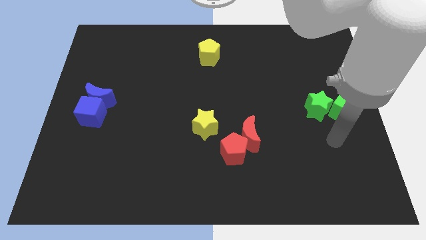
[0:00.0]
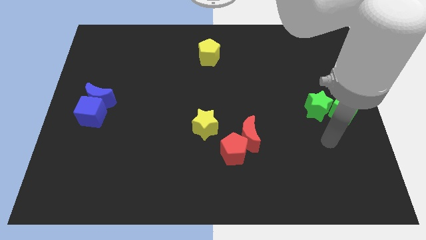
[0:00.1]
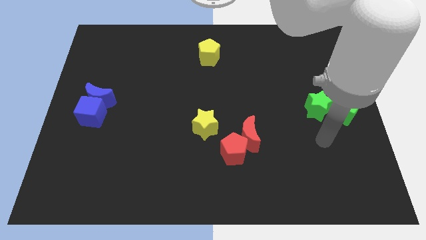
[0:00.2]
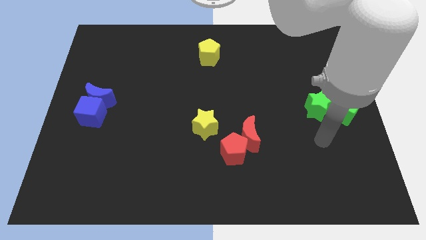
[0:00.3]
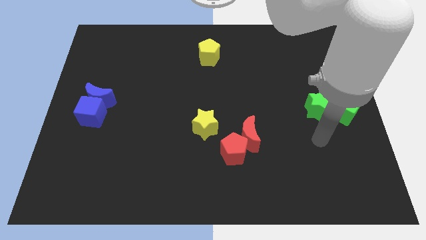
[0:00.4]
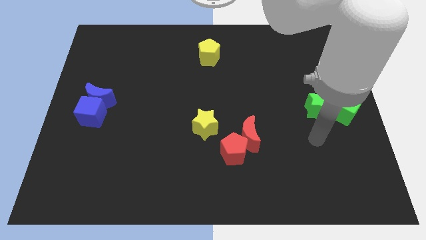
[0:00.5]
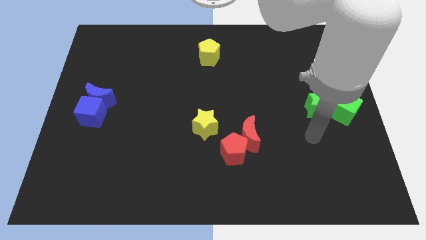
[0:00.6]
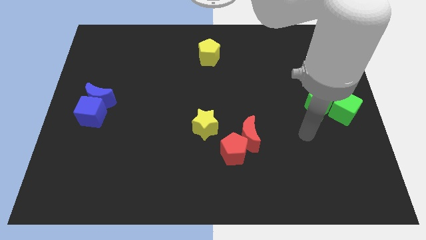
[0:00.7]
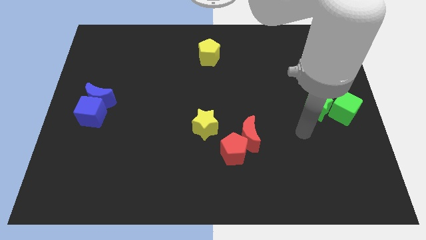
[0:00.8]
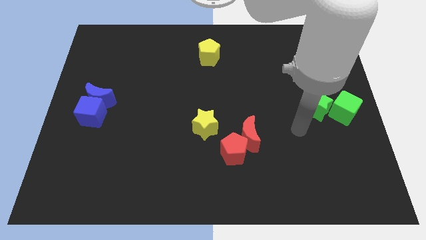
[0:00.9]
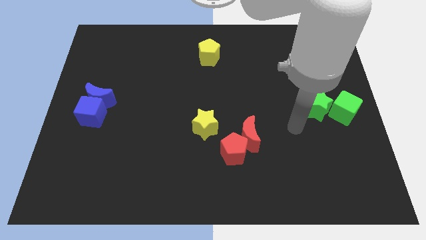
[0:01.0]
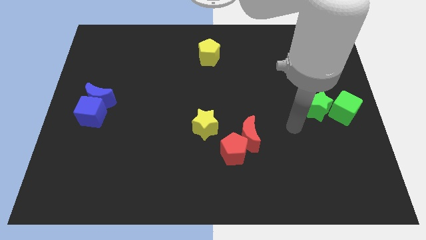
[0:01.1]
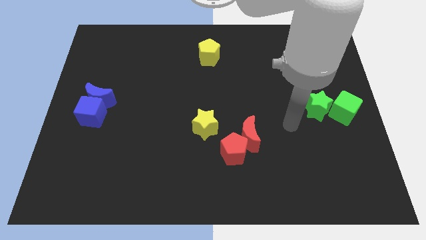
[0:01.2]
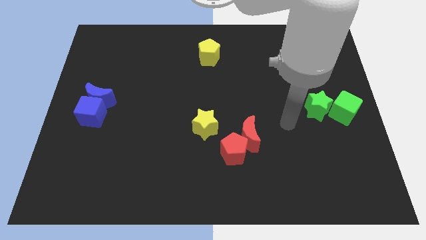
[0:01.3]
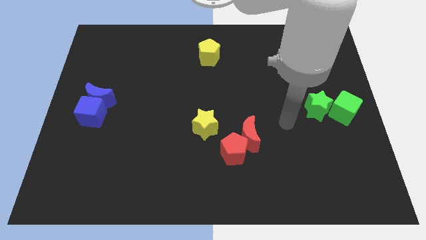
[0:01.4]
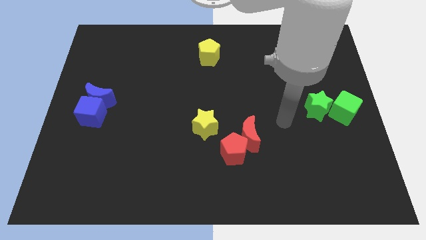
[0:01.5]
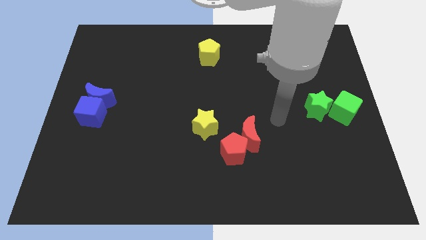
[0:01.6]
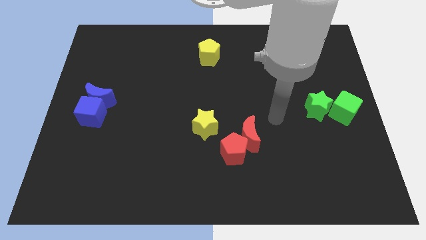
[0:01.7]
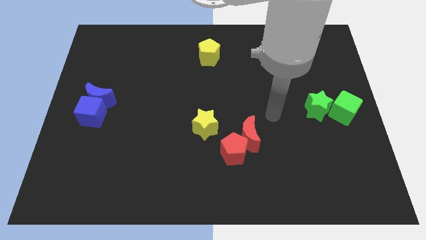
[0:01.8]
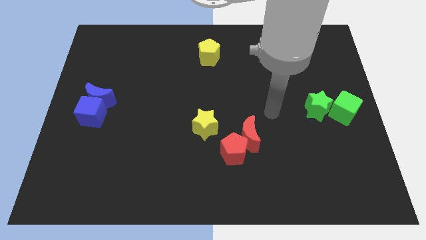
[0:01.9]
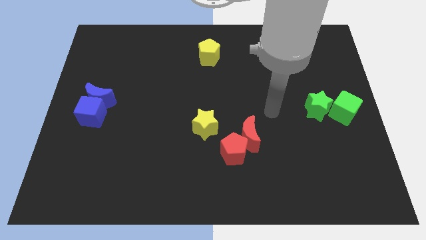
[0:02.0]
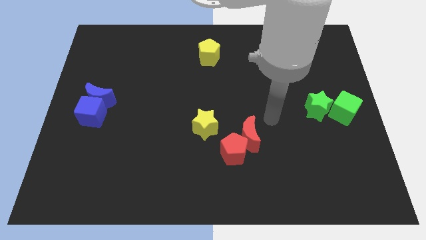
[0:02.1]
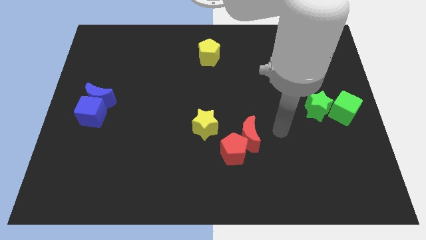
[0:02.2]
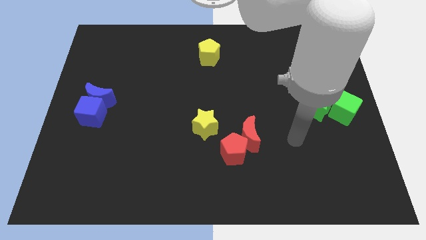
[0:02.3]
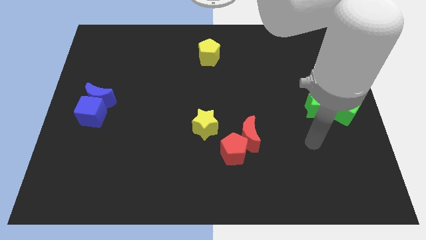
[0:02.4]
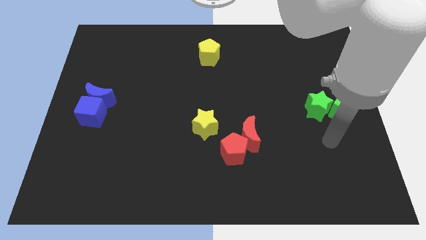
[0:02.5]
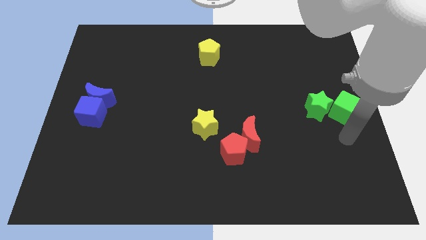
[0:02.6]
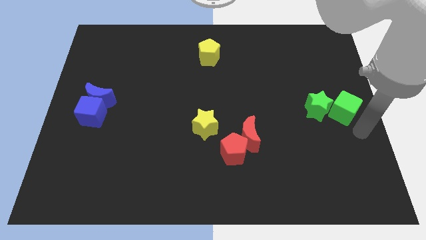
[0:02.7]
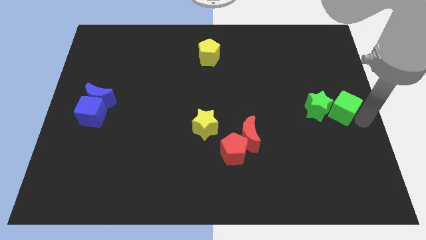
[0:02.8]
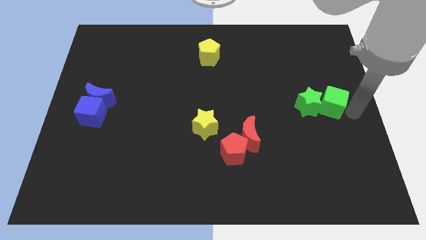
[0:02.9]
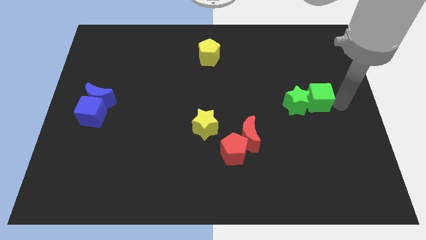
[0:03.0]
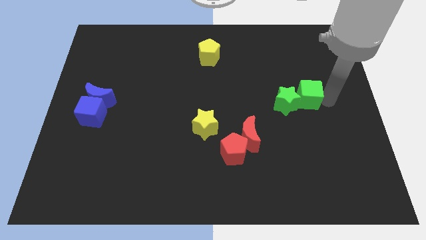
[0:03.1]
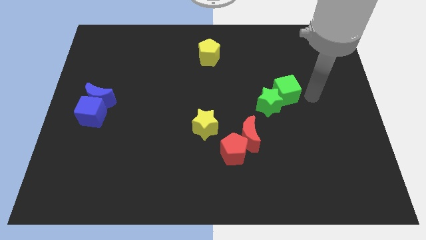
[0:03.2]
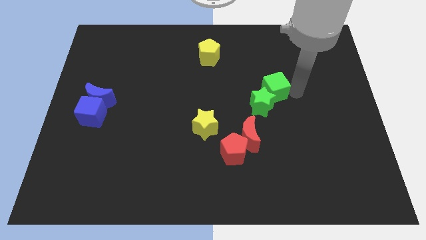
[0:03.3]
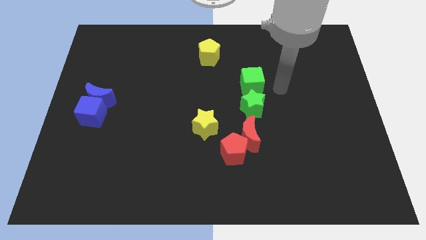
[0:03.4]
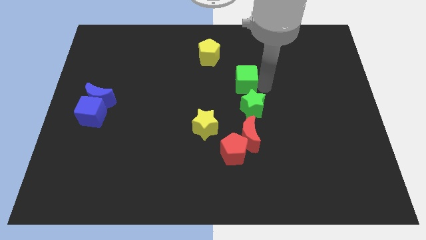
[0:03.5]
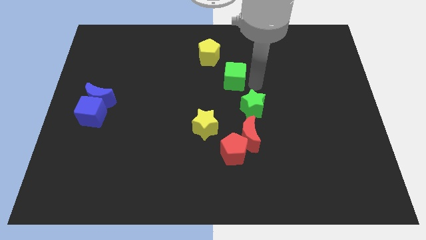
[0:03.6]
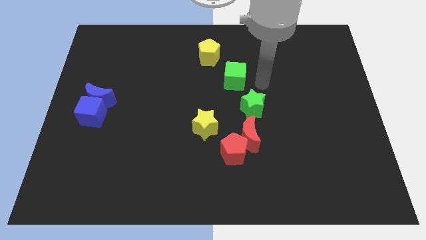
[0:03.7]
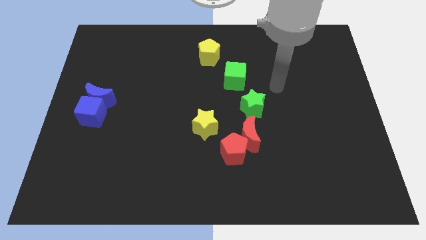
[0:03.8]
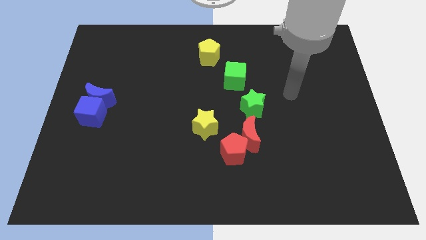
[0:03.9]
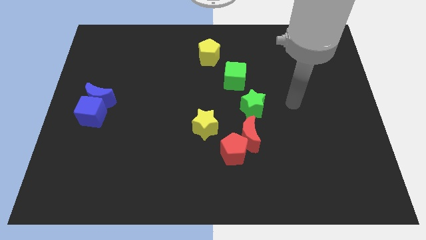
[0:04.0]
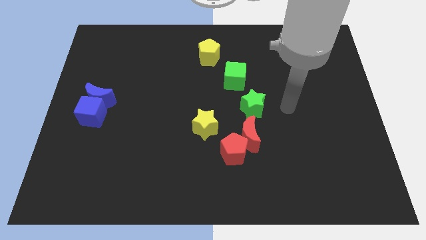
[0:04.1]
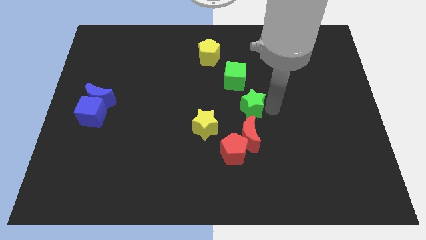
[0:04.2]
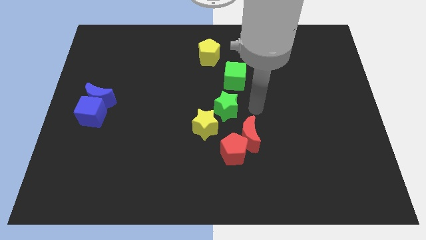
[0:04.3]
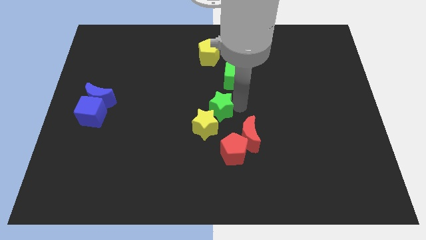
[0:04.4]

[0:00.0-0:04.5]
push the green star and green cube towards the center

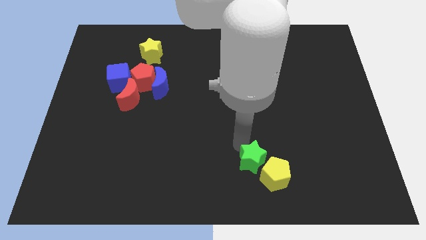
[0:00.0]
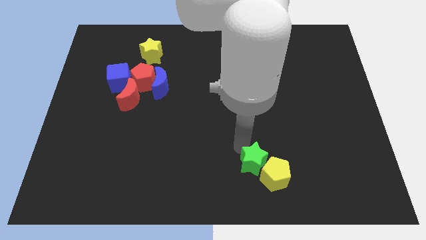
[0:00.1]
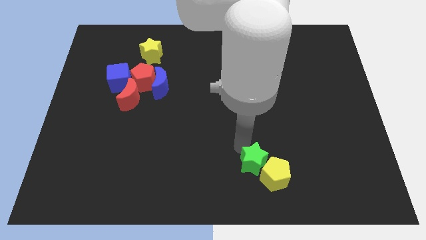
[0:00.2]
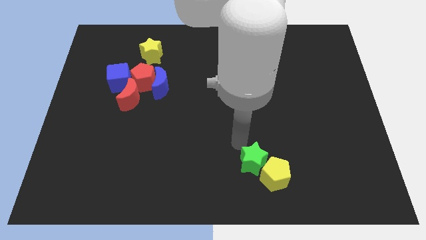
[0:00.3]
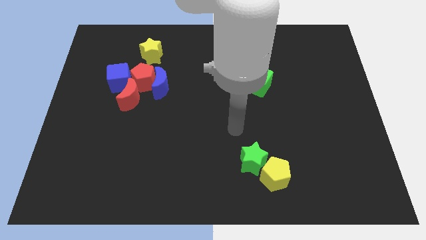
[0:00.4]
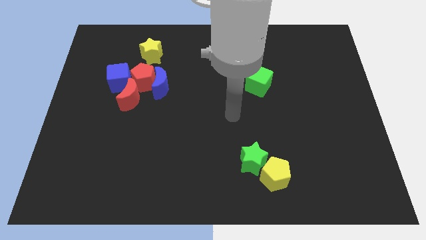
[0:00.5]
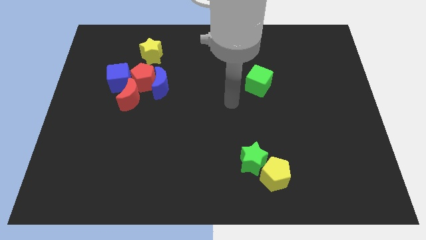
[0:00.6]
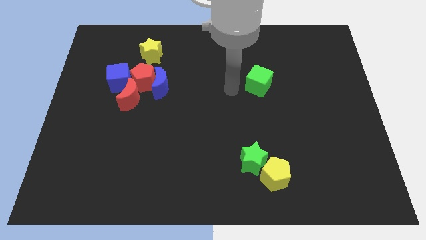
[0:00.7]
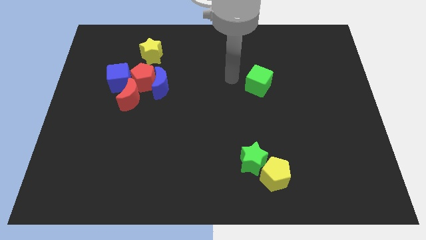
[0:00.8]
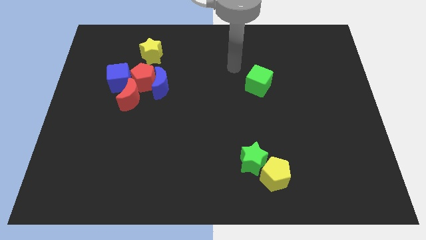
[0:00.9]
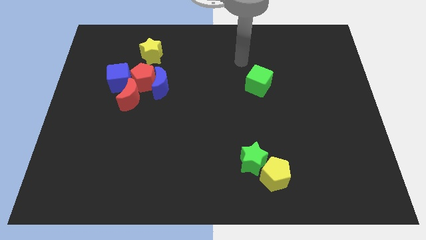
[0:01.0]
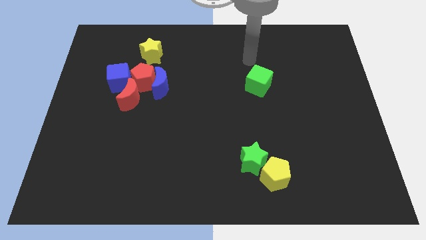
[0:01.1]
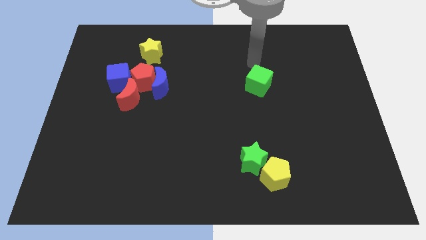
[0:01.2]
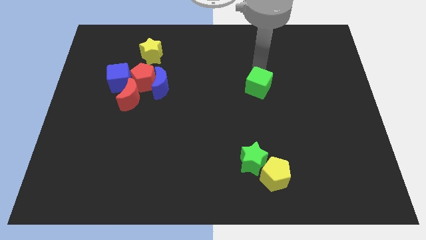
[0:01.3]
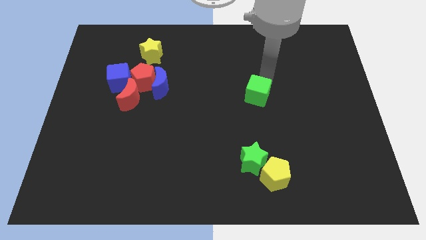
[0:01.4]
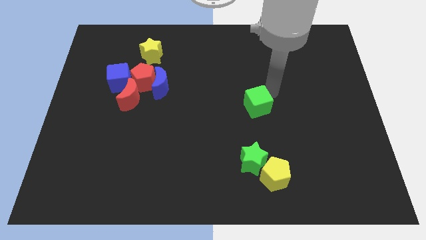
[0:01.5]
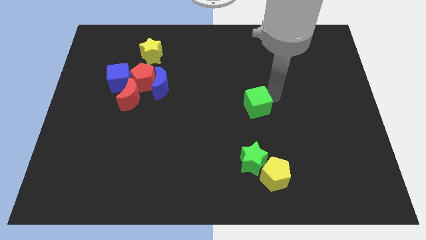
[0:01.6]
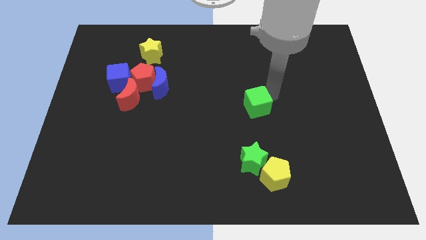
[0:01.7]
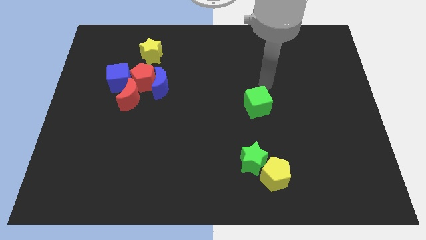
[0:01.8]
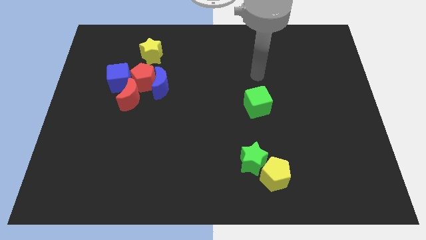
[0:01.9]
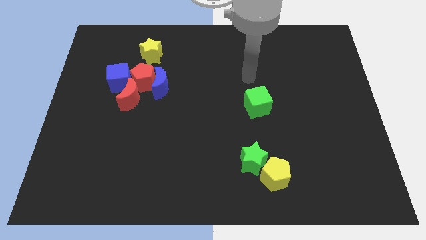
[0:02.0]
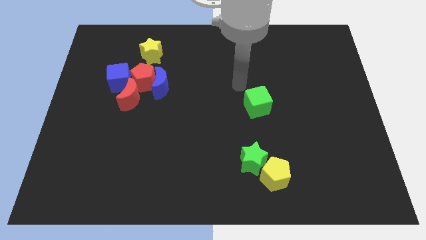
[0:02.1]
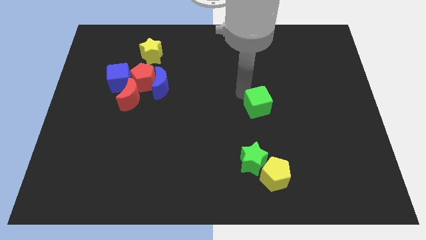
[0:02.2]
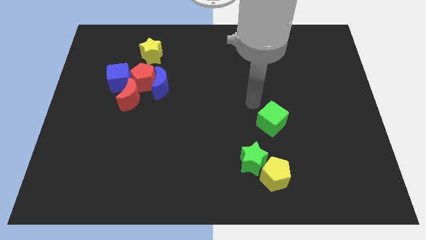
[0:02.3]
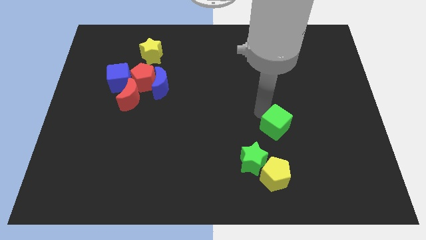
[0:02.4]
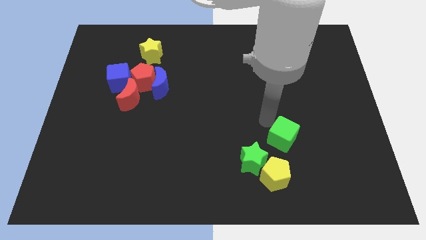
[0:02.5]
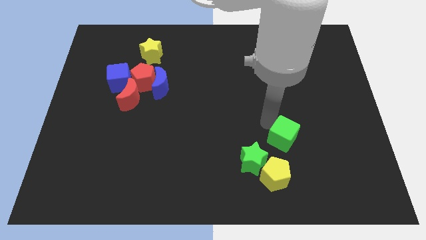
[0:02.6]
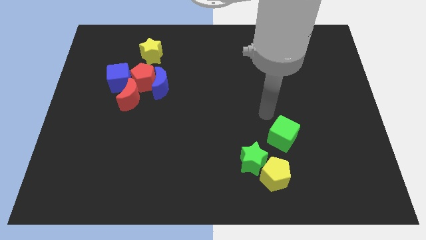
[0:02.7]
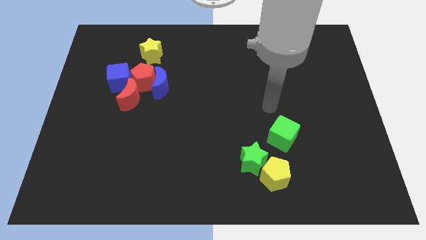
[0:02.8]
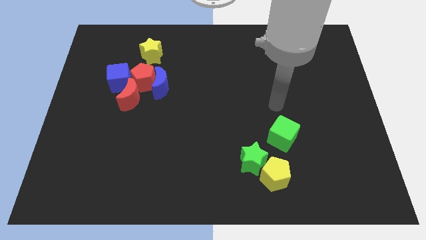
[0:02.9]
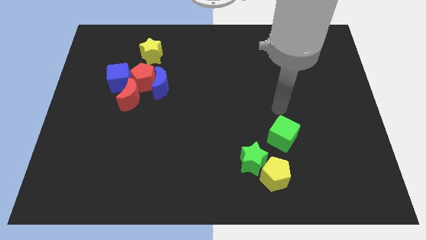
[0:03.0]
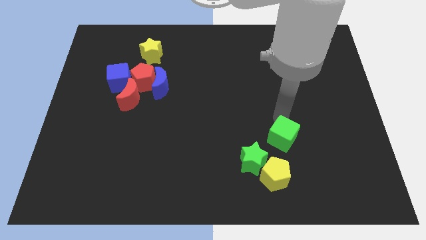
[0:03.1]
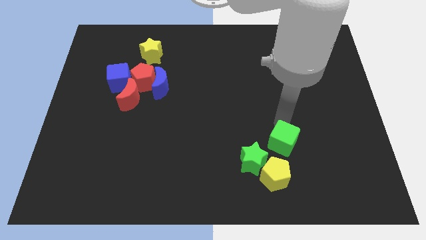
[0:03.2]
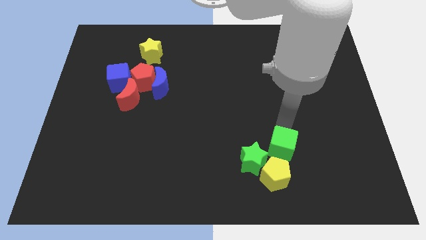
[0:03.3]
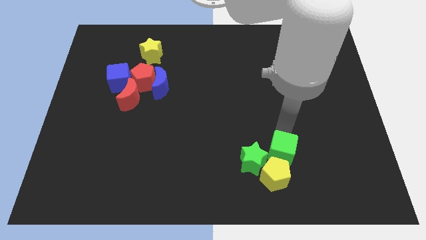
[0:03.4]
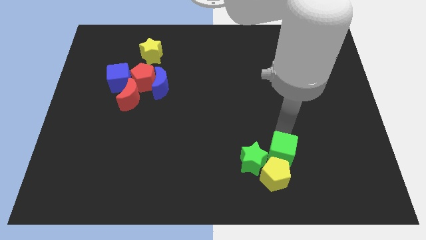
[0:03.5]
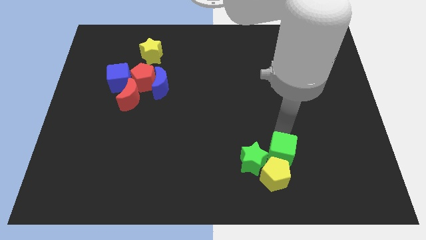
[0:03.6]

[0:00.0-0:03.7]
push the green cube above the yellow pentagon

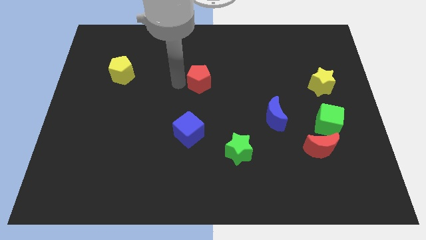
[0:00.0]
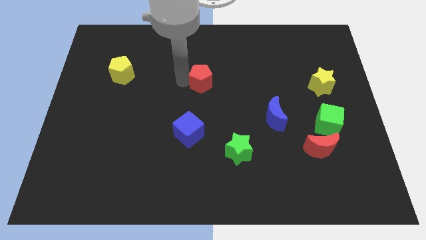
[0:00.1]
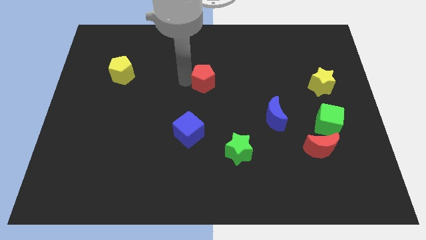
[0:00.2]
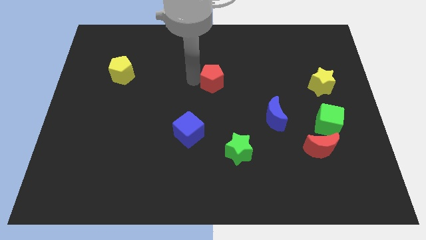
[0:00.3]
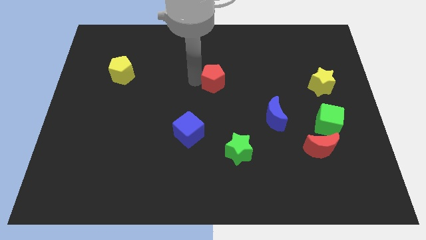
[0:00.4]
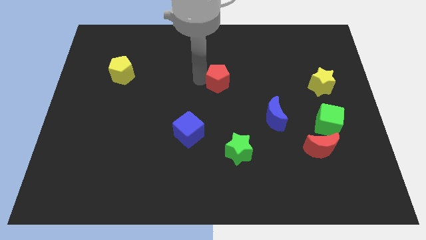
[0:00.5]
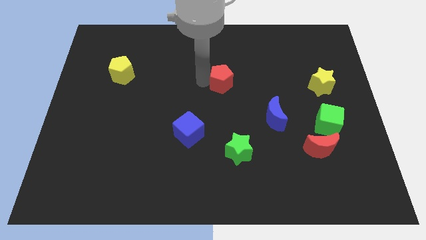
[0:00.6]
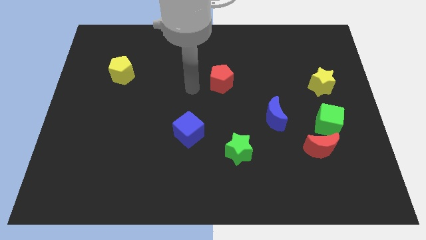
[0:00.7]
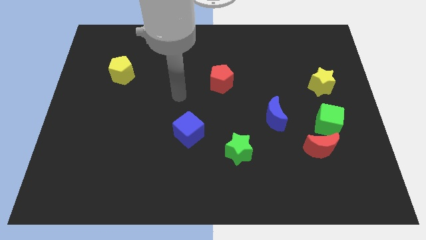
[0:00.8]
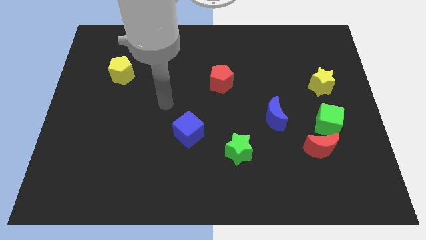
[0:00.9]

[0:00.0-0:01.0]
place the red pentagon in between the yellow pentagon and the yellow star

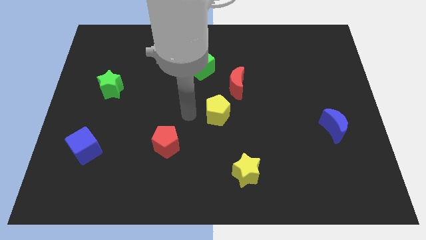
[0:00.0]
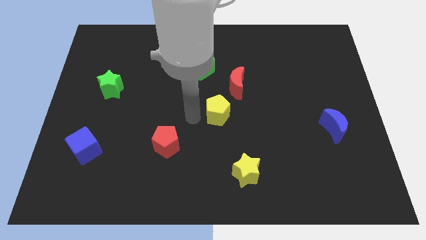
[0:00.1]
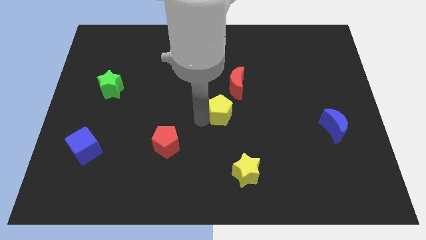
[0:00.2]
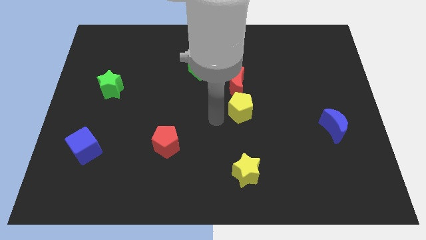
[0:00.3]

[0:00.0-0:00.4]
place the yellow pentagon below the red moon
